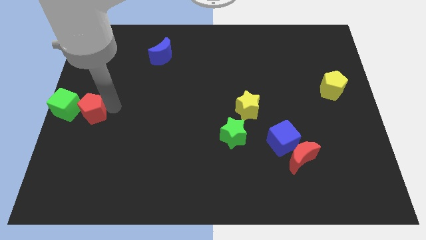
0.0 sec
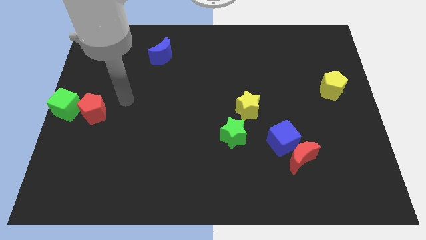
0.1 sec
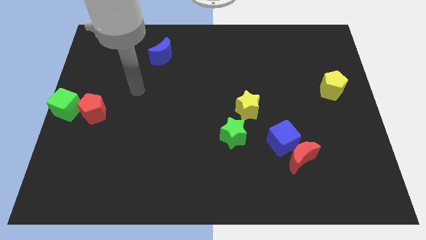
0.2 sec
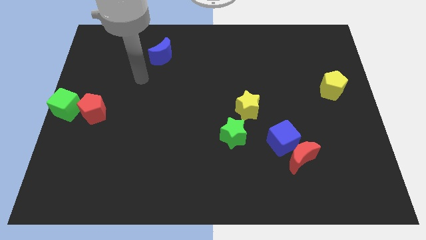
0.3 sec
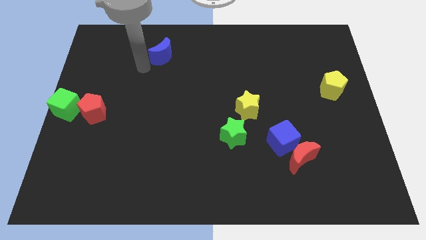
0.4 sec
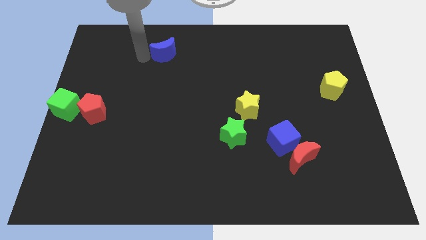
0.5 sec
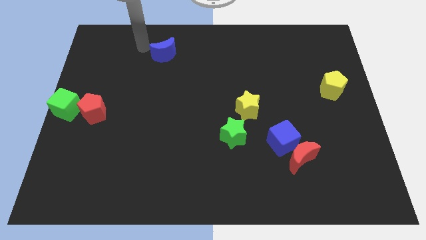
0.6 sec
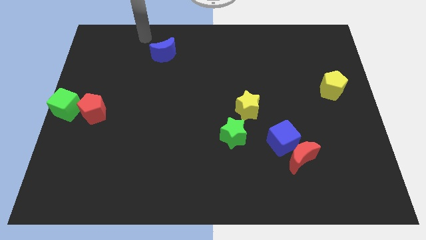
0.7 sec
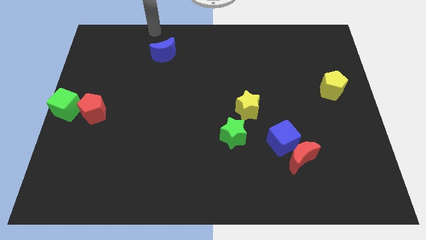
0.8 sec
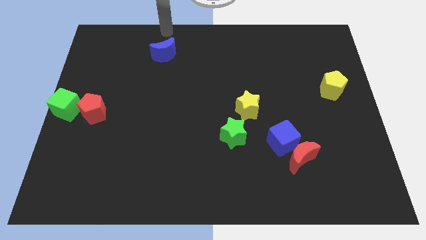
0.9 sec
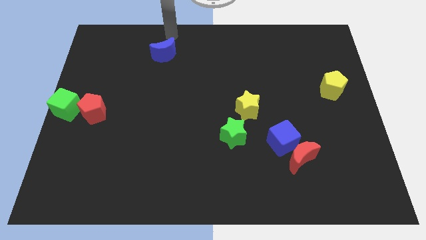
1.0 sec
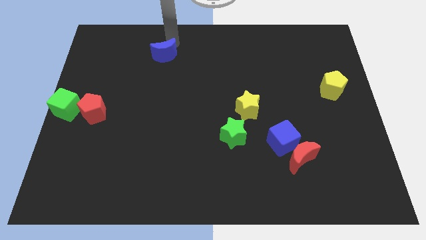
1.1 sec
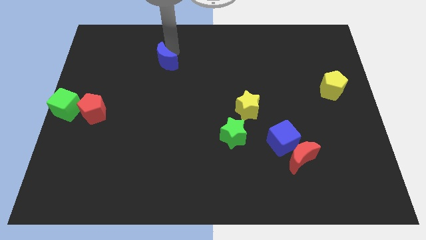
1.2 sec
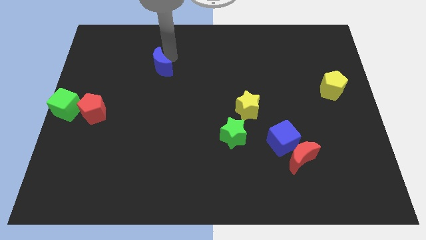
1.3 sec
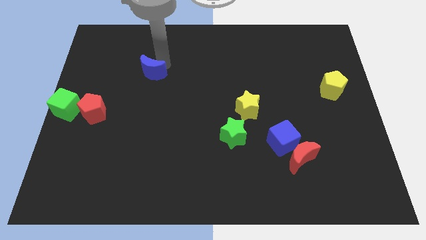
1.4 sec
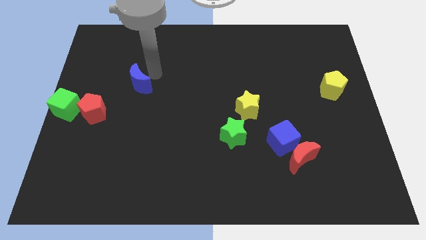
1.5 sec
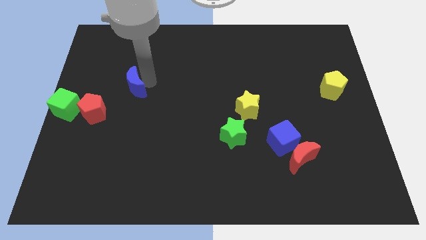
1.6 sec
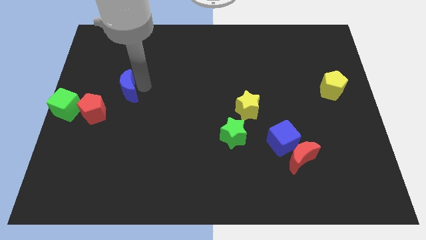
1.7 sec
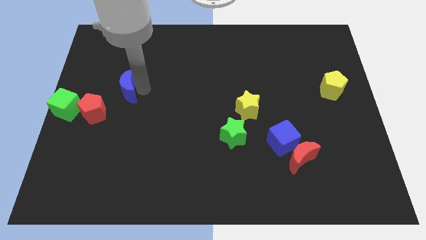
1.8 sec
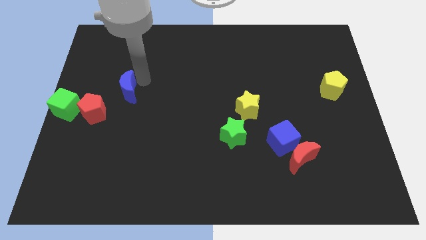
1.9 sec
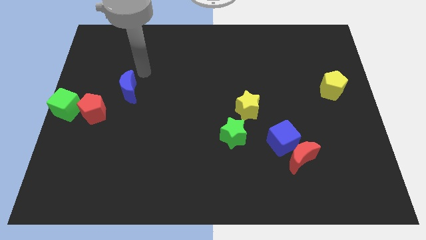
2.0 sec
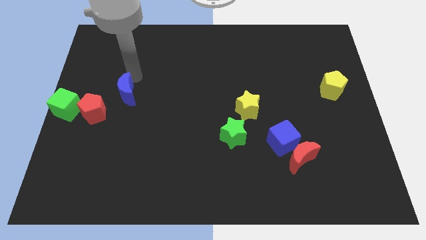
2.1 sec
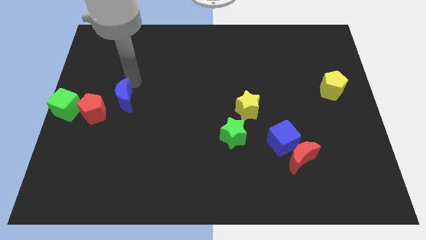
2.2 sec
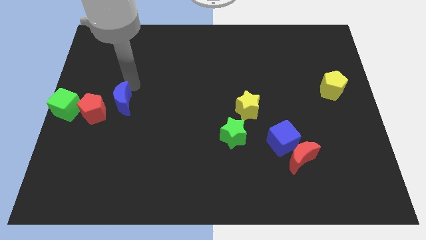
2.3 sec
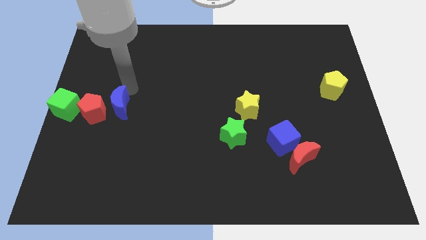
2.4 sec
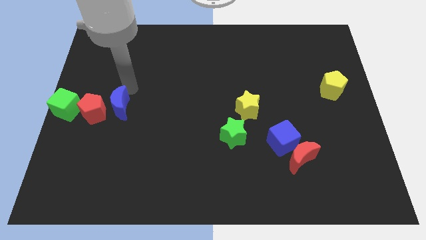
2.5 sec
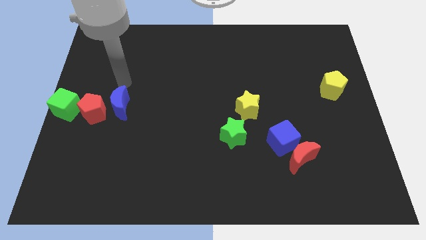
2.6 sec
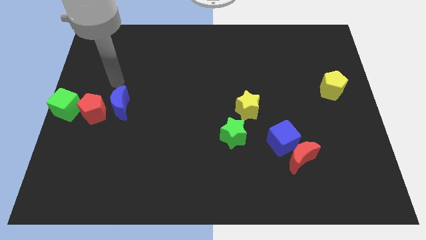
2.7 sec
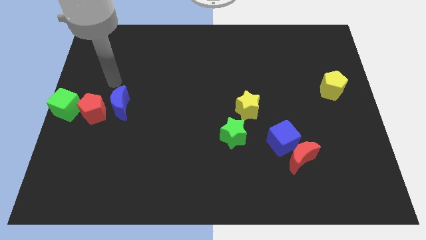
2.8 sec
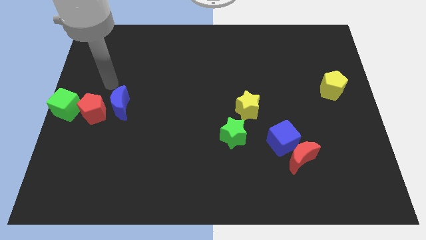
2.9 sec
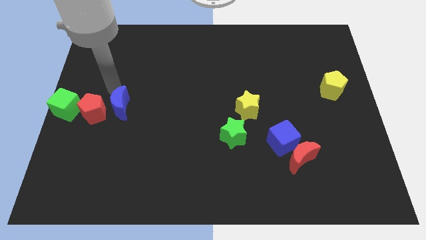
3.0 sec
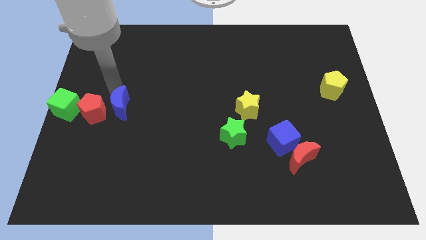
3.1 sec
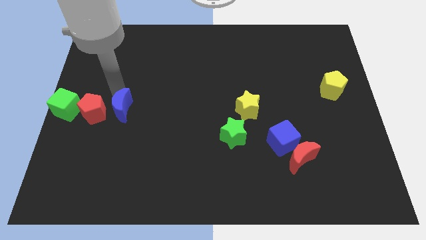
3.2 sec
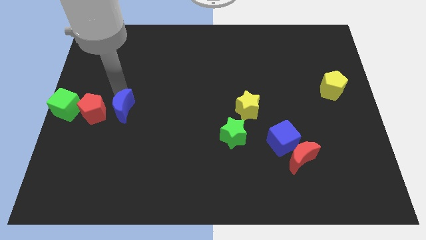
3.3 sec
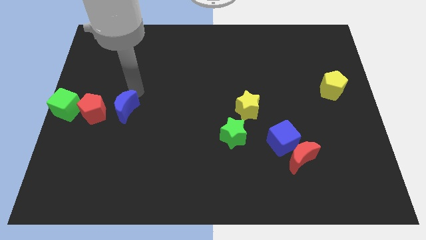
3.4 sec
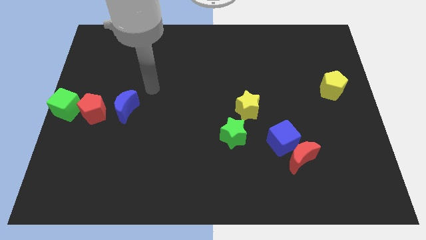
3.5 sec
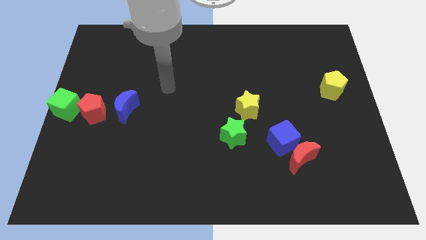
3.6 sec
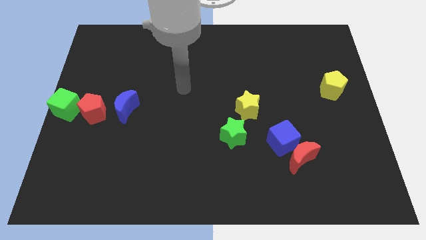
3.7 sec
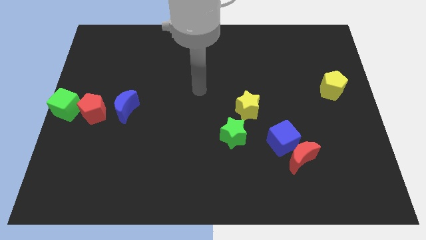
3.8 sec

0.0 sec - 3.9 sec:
place the blue moon left to the yellow star

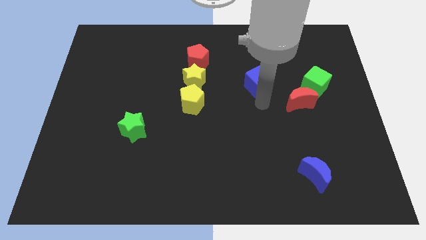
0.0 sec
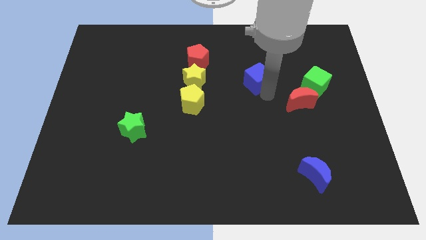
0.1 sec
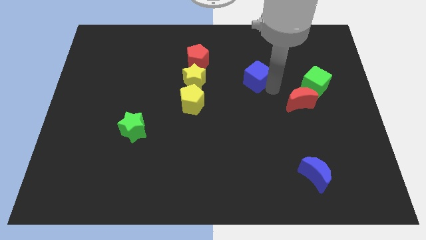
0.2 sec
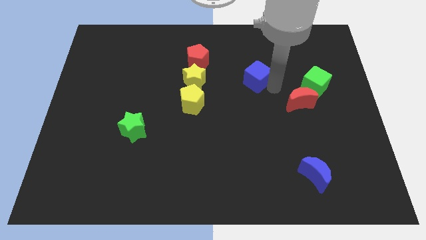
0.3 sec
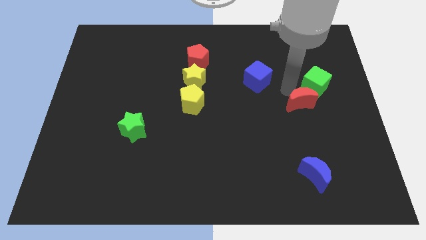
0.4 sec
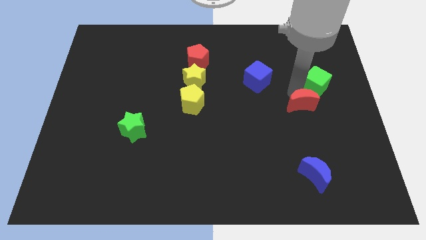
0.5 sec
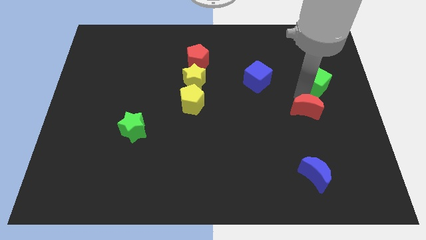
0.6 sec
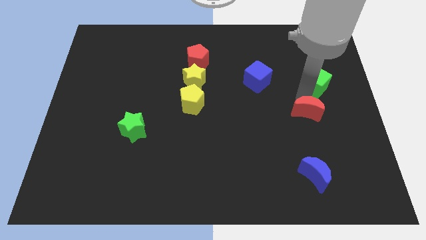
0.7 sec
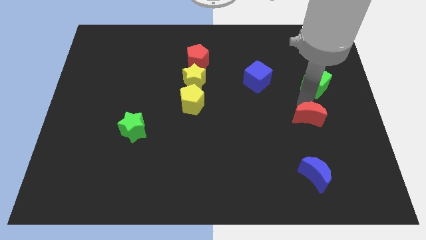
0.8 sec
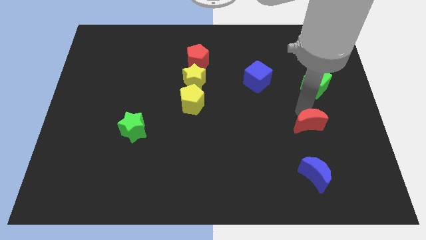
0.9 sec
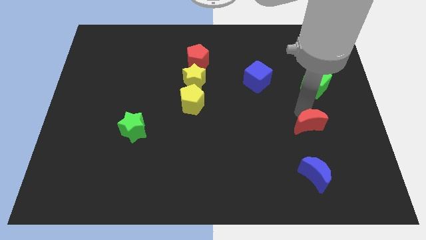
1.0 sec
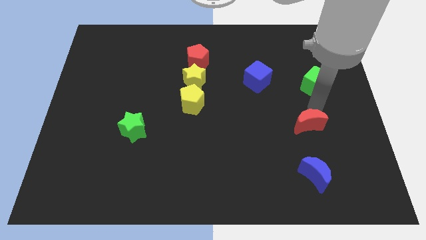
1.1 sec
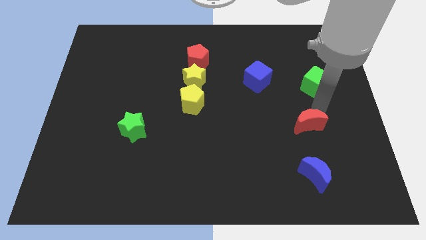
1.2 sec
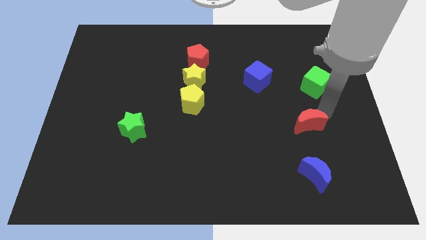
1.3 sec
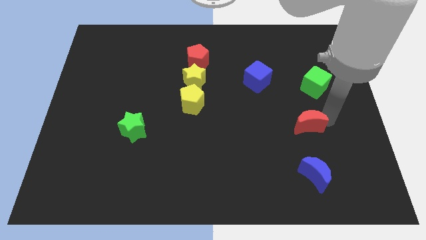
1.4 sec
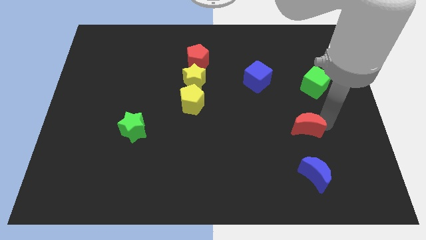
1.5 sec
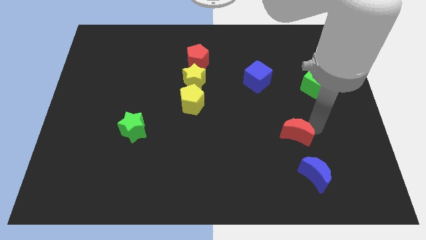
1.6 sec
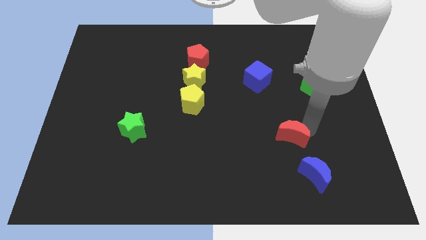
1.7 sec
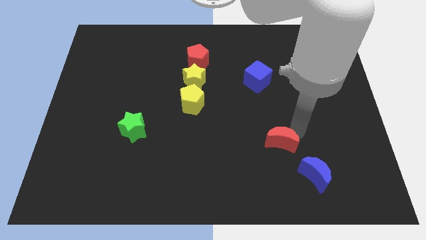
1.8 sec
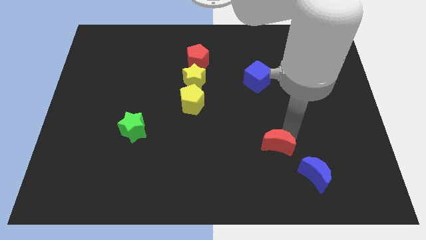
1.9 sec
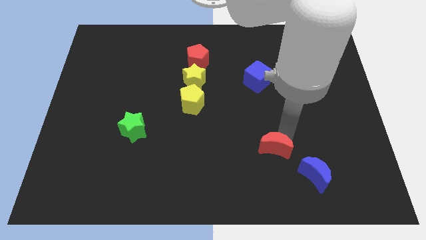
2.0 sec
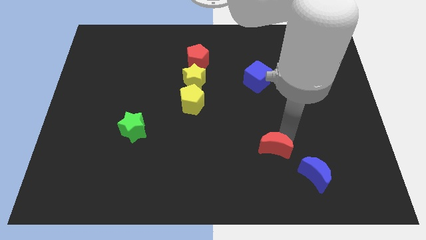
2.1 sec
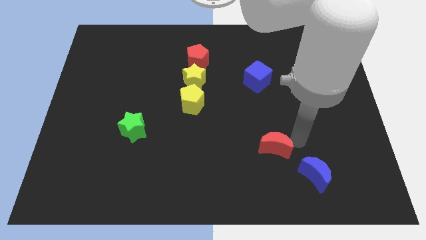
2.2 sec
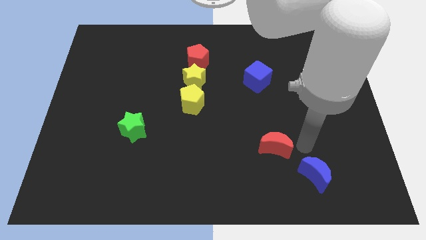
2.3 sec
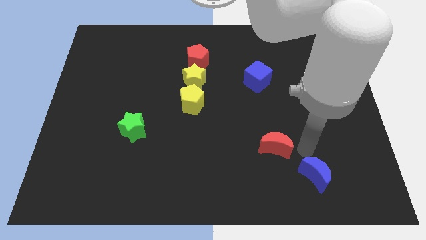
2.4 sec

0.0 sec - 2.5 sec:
place the red moon diagonally to blue moon

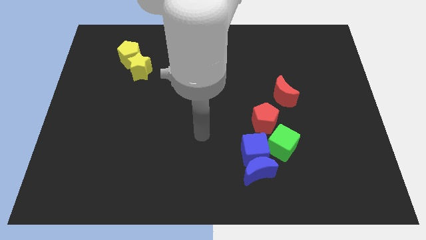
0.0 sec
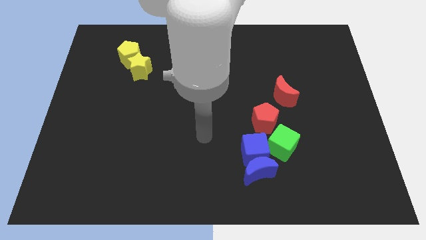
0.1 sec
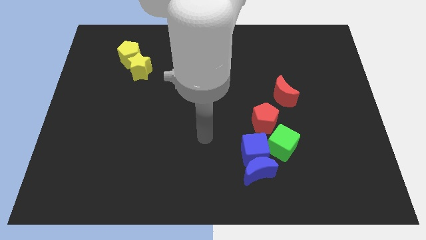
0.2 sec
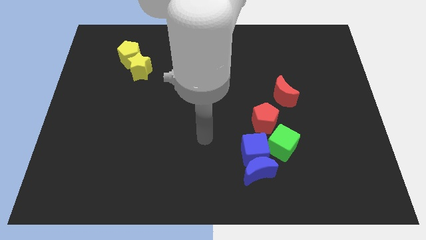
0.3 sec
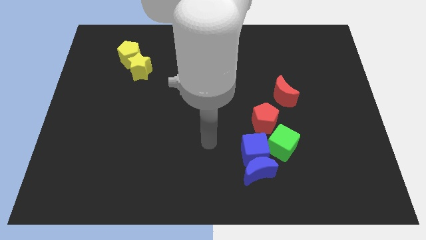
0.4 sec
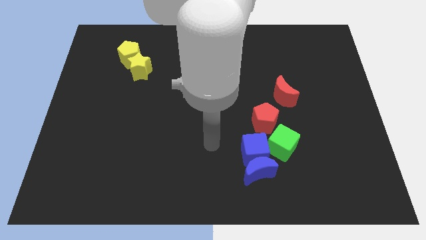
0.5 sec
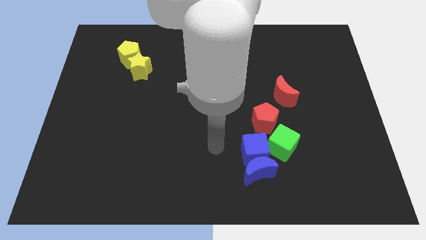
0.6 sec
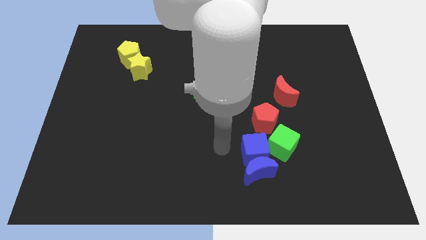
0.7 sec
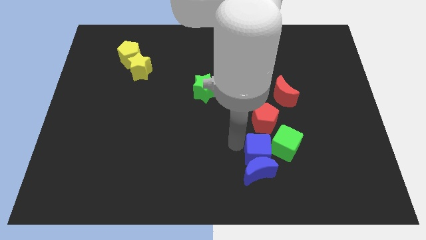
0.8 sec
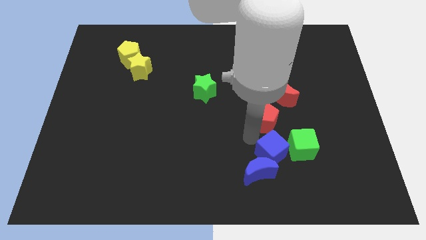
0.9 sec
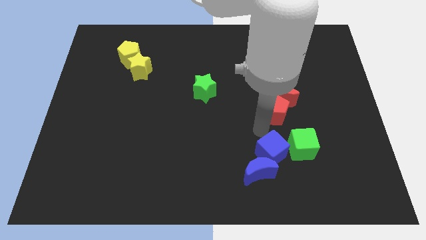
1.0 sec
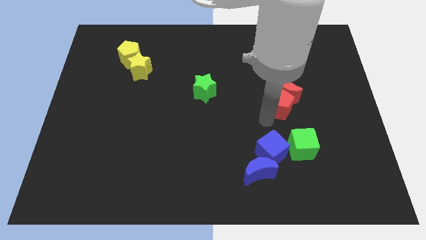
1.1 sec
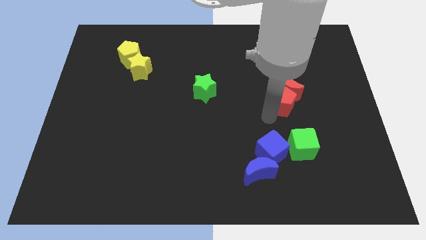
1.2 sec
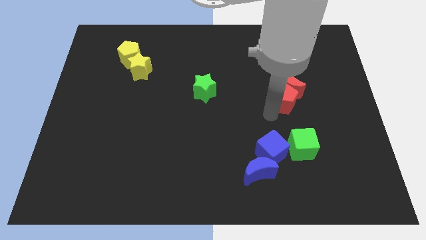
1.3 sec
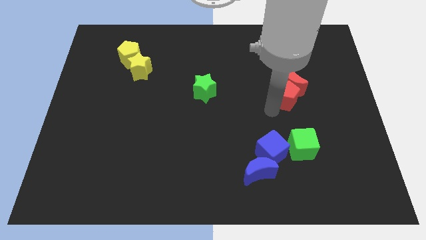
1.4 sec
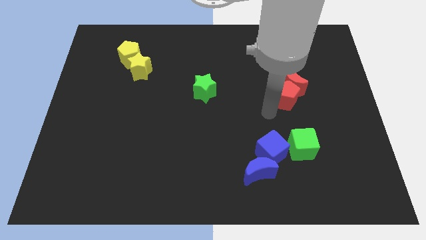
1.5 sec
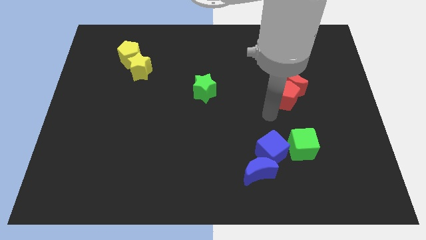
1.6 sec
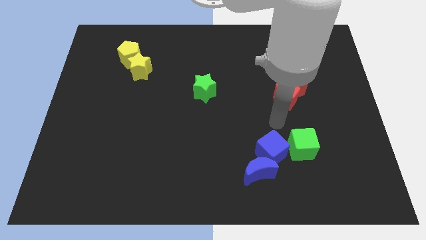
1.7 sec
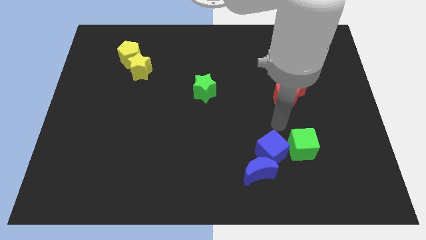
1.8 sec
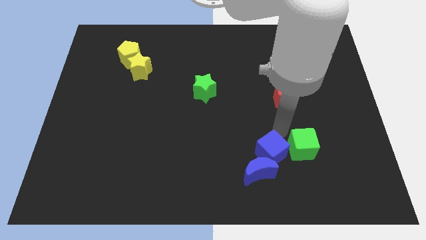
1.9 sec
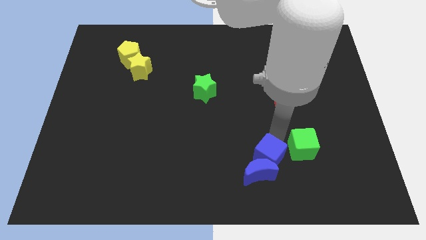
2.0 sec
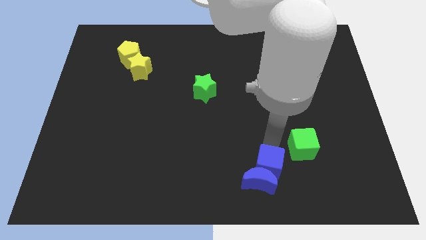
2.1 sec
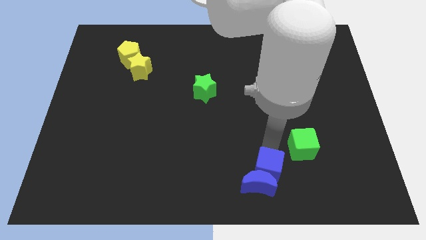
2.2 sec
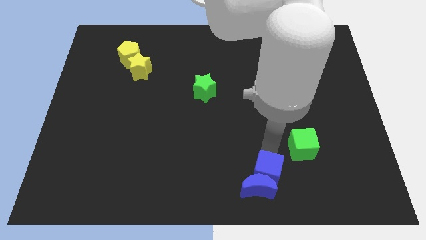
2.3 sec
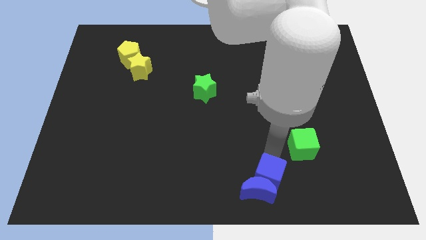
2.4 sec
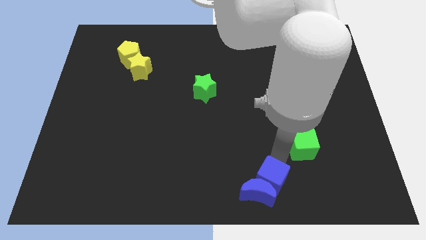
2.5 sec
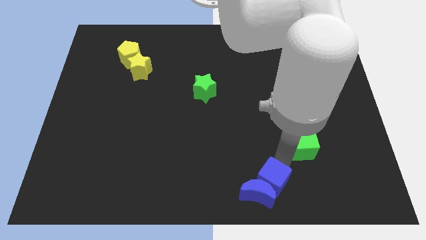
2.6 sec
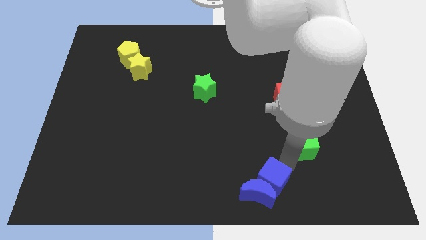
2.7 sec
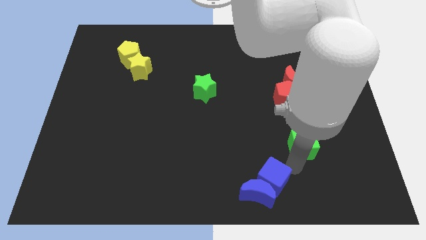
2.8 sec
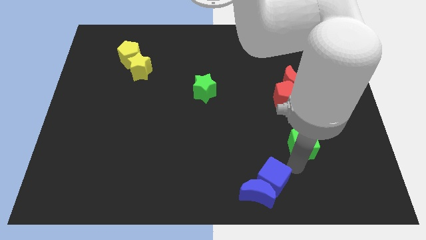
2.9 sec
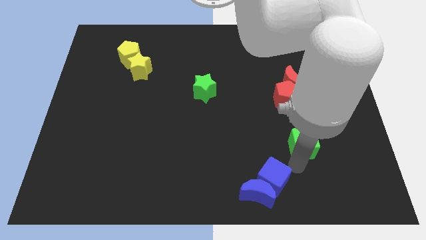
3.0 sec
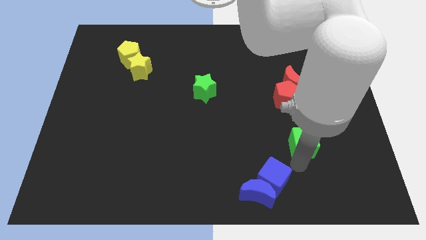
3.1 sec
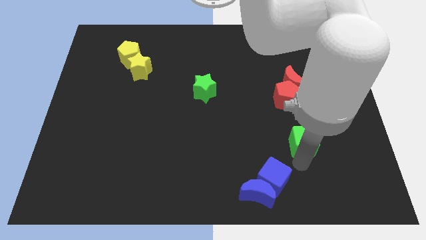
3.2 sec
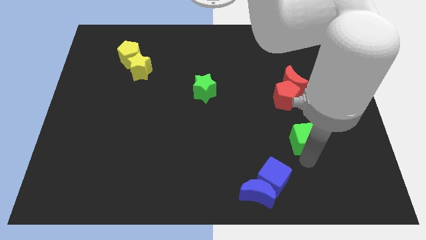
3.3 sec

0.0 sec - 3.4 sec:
push the blue blocks towards bottom
